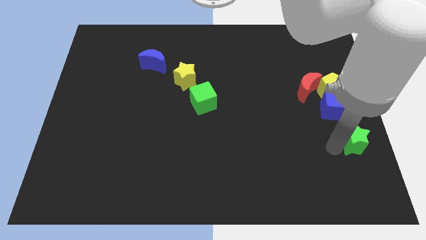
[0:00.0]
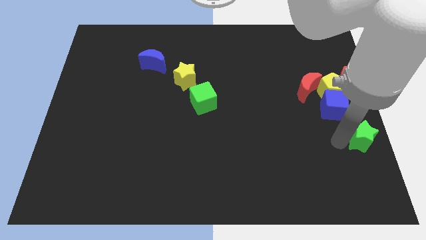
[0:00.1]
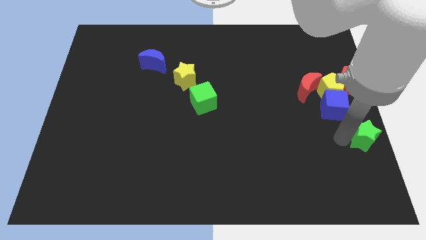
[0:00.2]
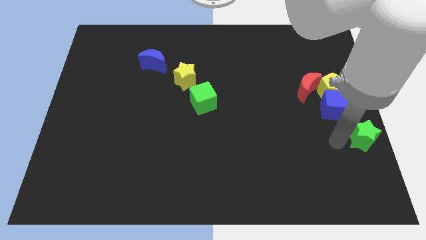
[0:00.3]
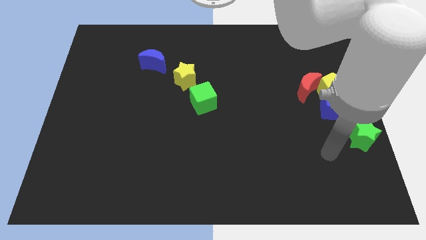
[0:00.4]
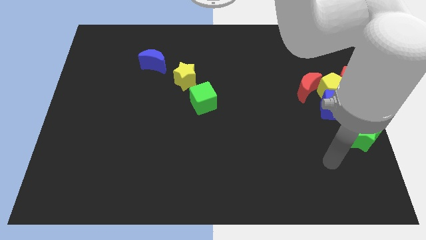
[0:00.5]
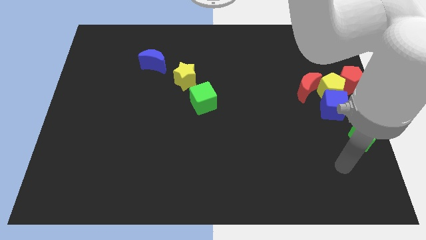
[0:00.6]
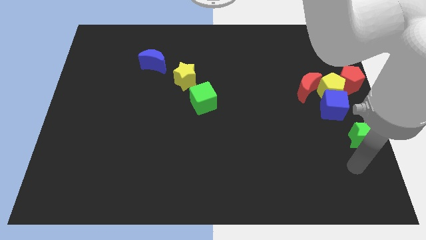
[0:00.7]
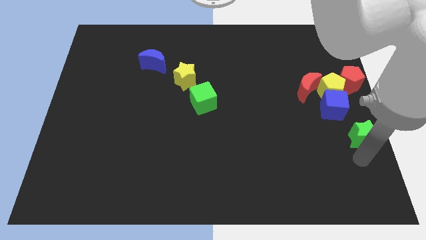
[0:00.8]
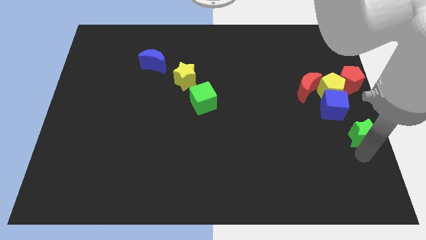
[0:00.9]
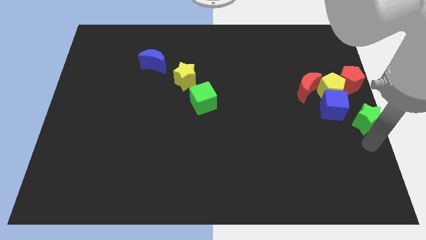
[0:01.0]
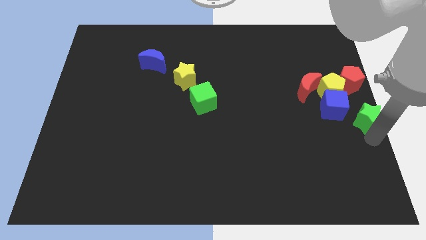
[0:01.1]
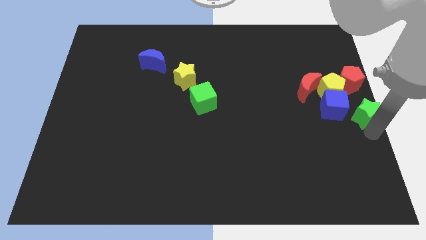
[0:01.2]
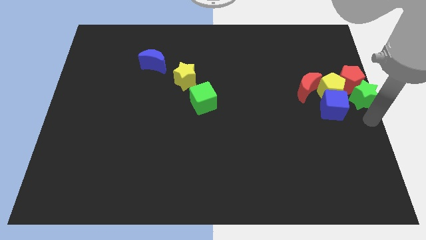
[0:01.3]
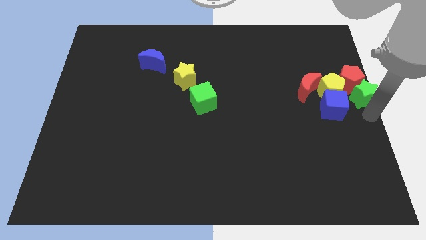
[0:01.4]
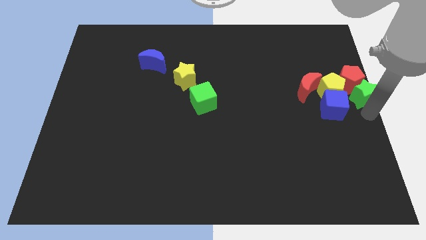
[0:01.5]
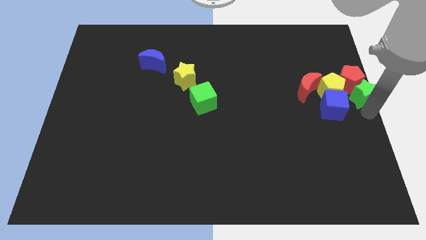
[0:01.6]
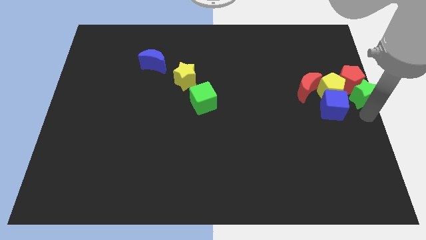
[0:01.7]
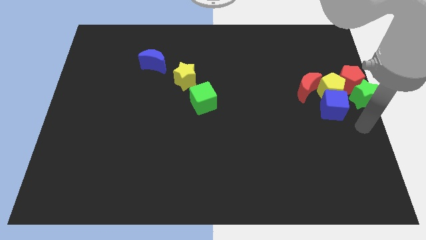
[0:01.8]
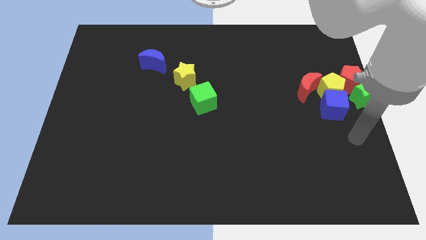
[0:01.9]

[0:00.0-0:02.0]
move the green star below the red penatgon

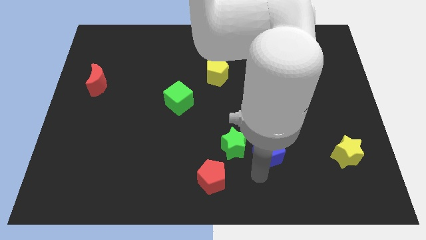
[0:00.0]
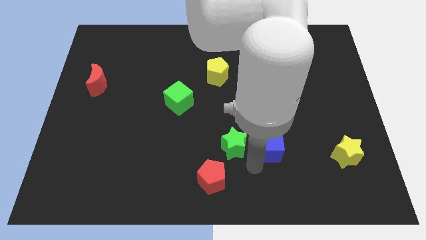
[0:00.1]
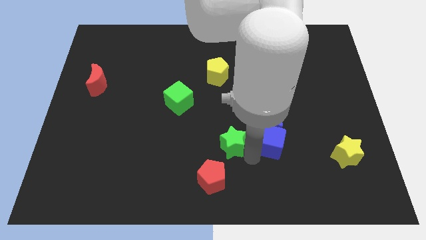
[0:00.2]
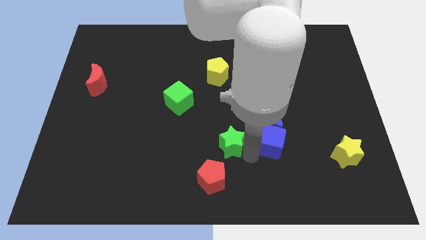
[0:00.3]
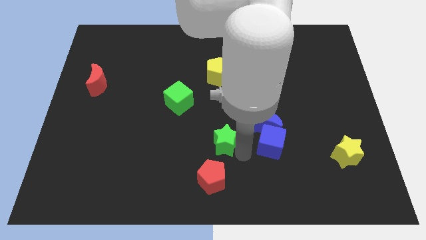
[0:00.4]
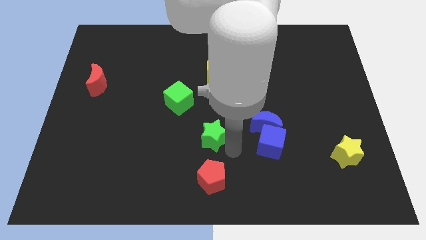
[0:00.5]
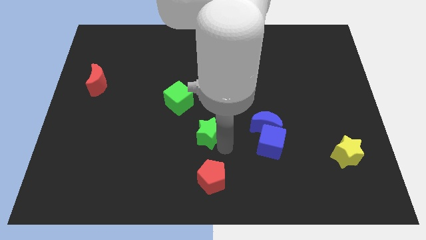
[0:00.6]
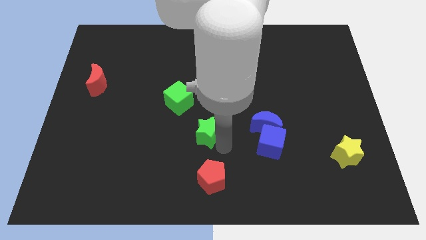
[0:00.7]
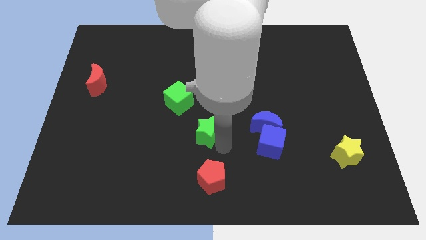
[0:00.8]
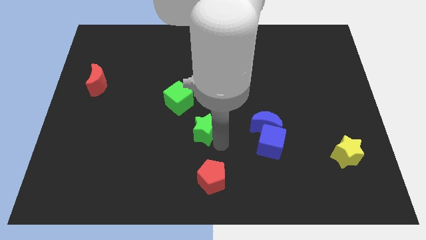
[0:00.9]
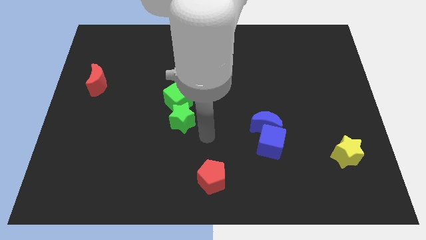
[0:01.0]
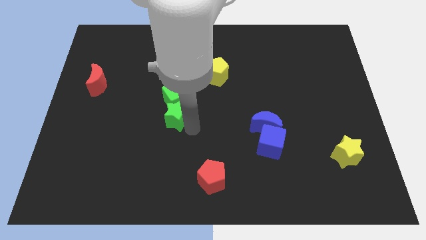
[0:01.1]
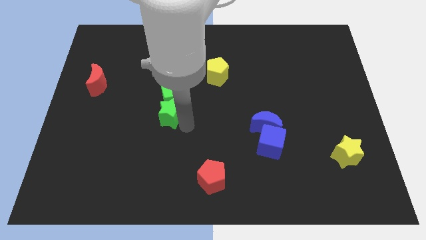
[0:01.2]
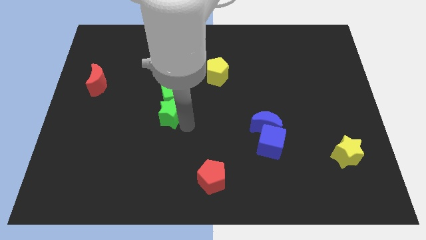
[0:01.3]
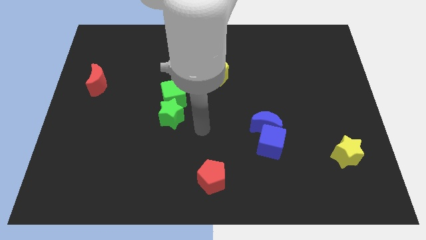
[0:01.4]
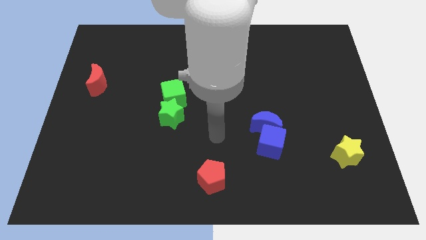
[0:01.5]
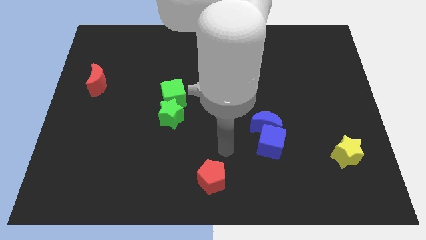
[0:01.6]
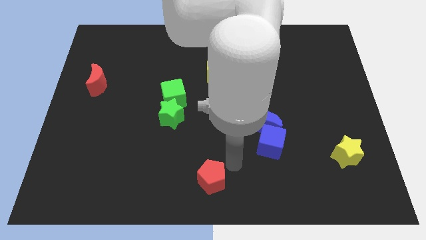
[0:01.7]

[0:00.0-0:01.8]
move the green star into the green cube

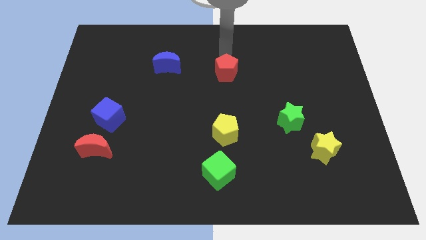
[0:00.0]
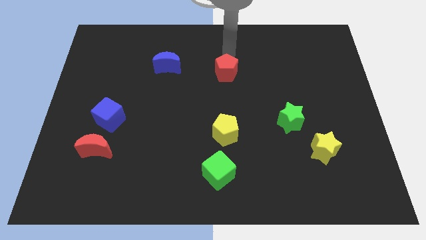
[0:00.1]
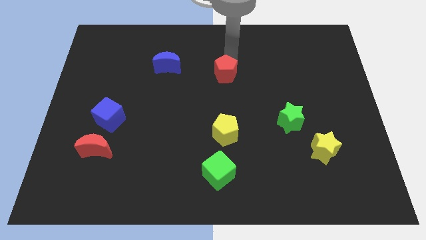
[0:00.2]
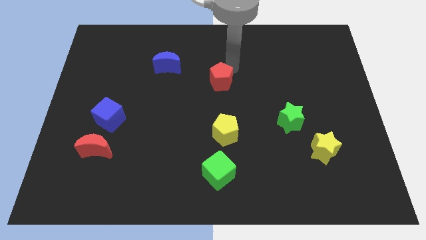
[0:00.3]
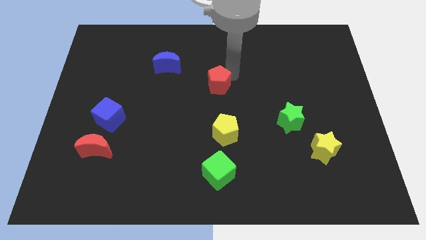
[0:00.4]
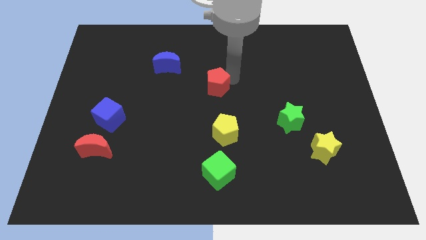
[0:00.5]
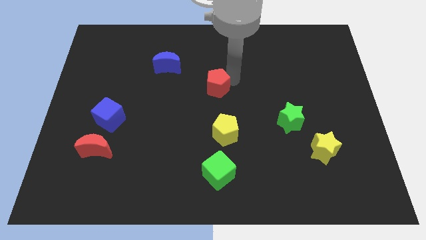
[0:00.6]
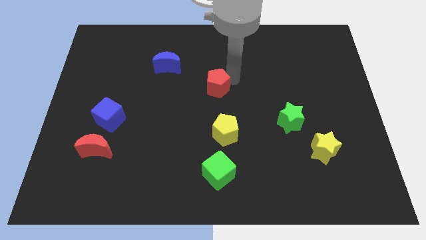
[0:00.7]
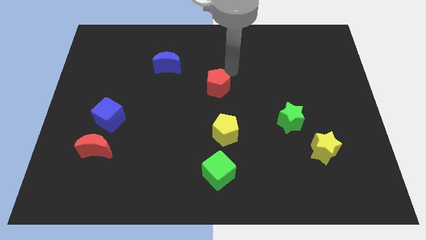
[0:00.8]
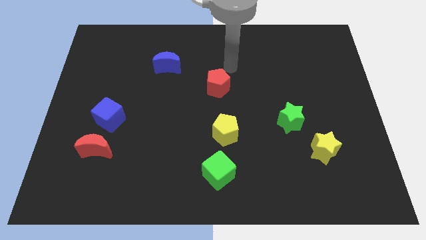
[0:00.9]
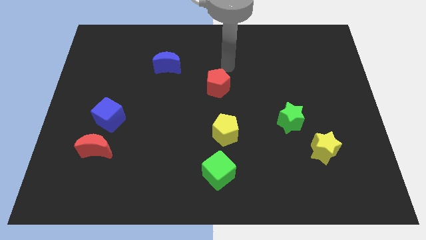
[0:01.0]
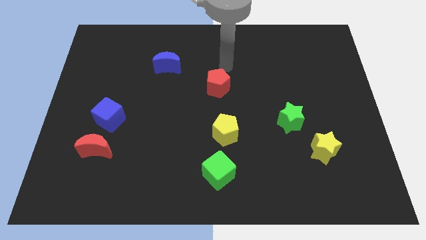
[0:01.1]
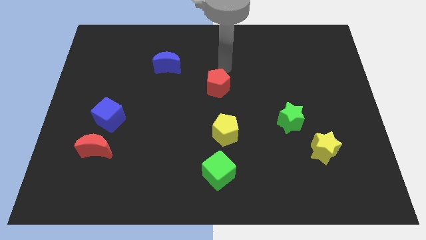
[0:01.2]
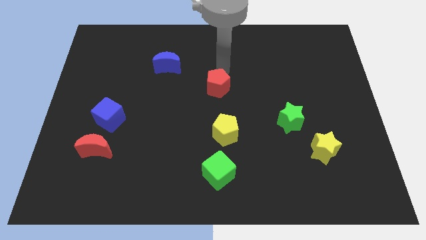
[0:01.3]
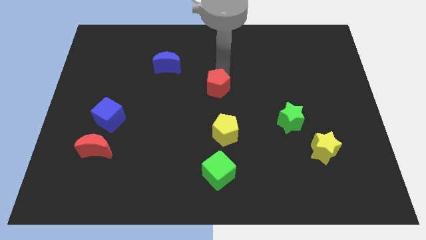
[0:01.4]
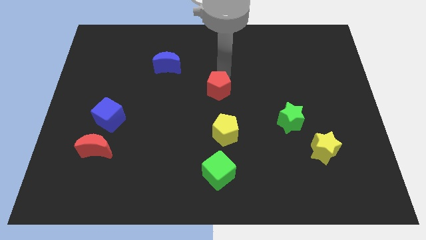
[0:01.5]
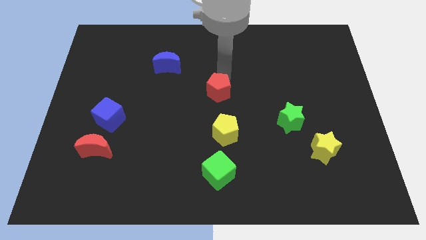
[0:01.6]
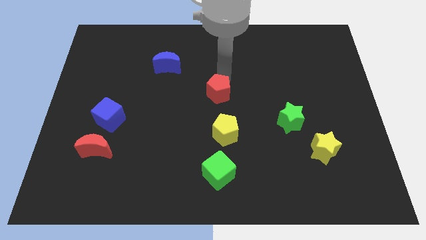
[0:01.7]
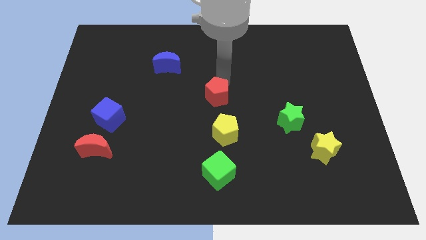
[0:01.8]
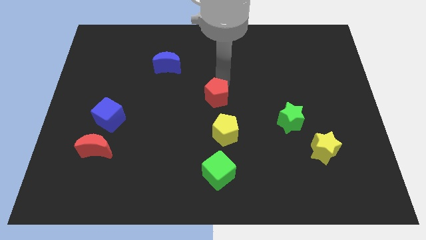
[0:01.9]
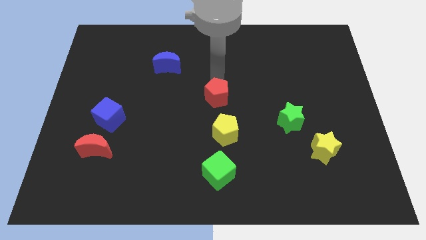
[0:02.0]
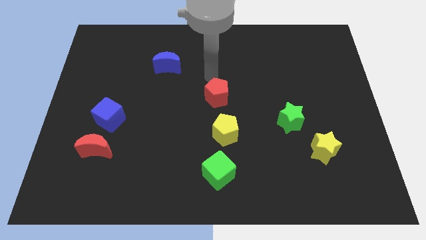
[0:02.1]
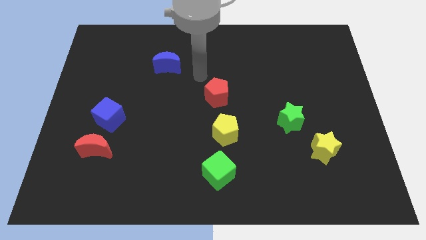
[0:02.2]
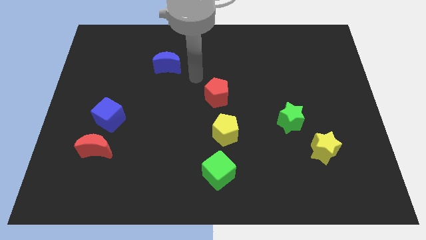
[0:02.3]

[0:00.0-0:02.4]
move the red pentagon above the yellow pentagon

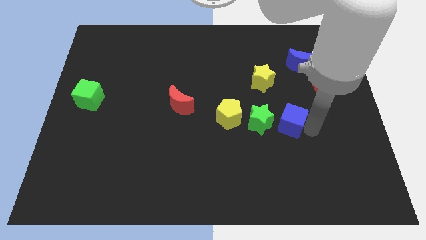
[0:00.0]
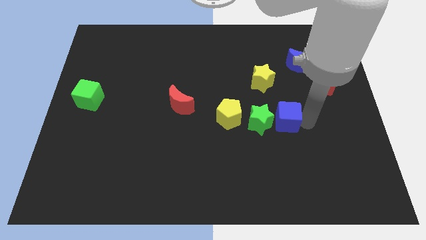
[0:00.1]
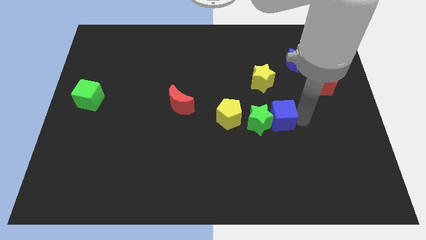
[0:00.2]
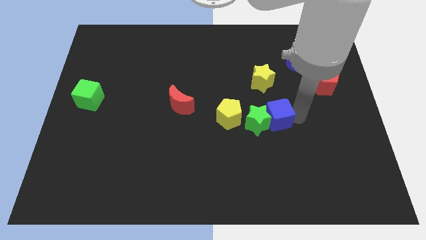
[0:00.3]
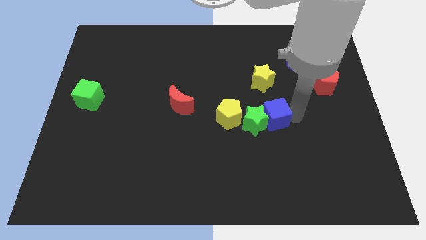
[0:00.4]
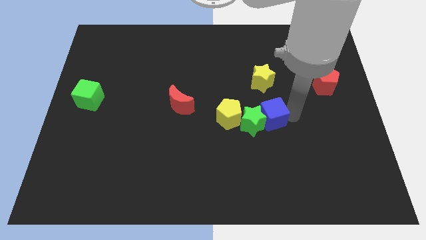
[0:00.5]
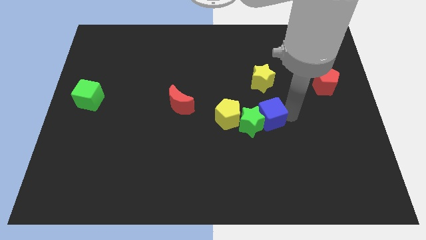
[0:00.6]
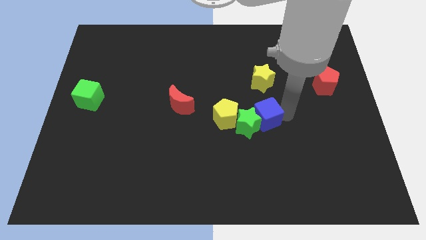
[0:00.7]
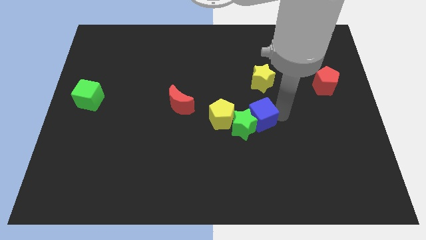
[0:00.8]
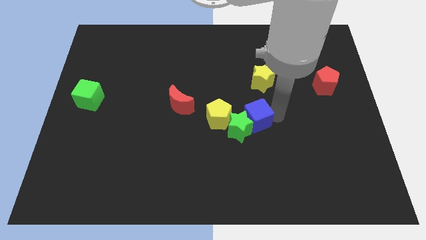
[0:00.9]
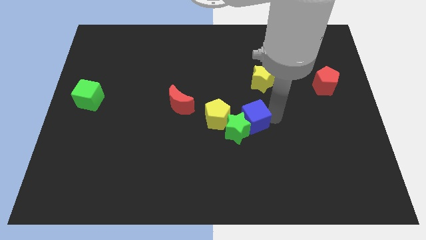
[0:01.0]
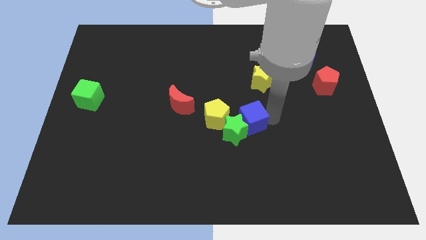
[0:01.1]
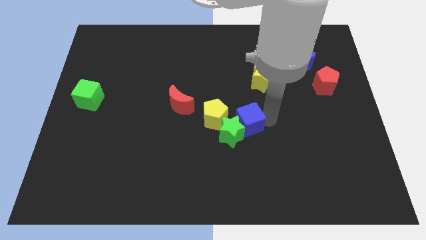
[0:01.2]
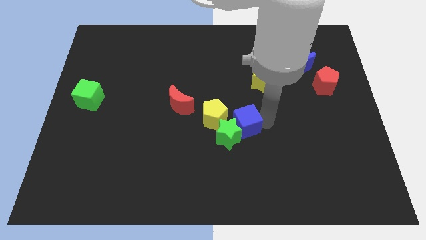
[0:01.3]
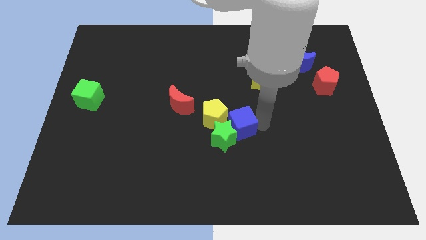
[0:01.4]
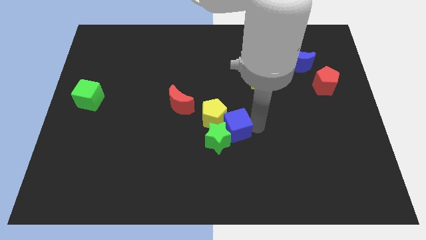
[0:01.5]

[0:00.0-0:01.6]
push the green star with the blue cube

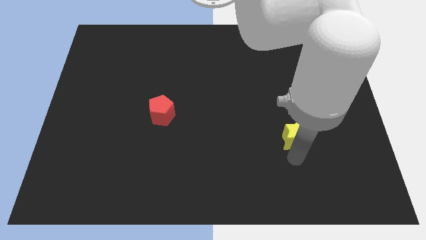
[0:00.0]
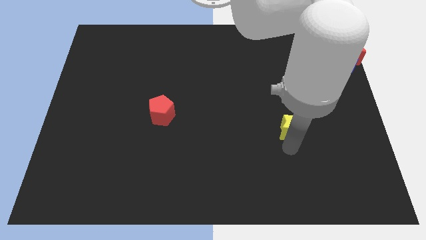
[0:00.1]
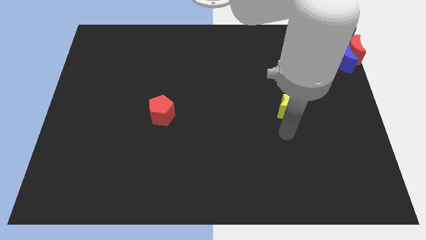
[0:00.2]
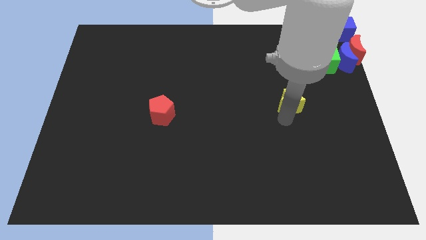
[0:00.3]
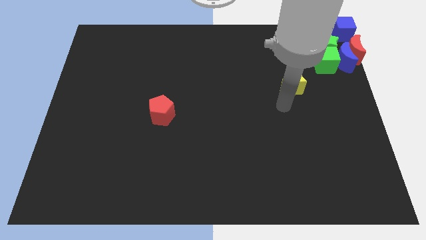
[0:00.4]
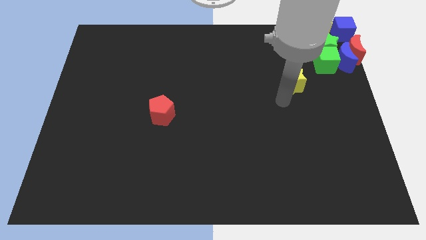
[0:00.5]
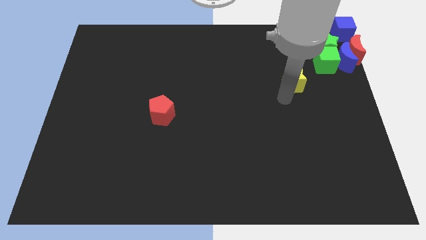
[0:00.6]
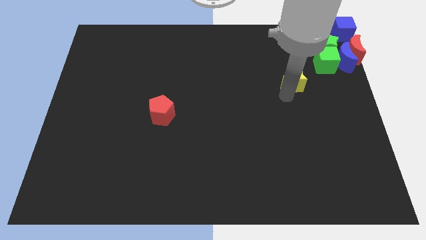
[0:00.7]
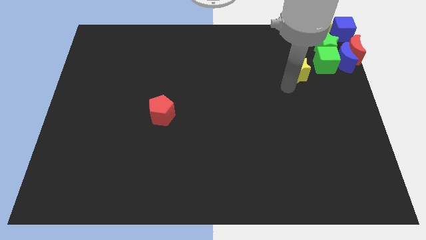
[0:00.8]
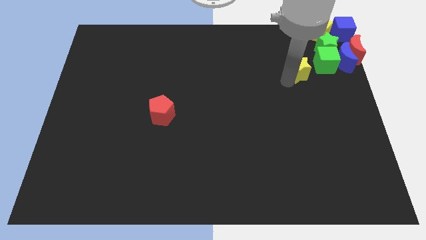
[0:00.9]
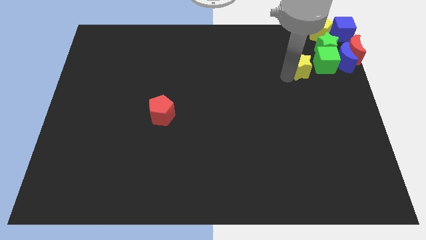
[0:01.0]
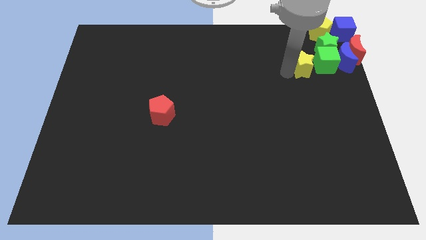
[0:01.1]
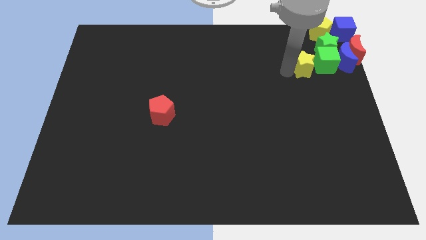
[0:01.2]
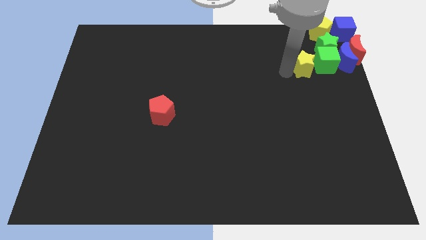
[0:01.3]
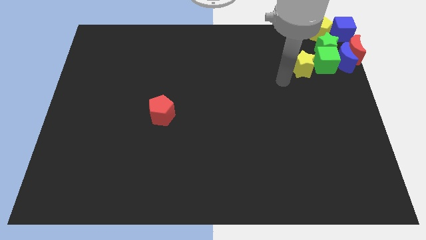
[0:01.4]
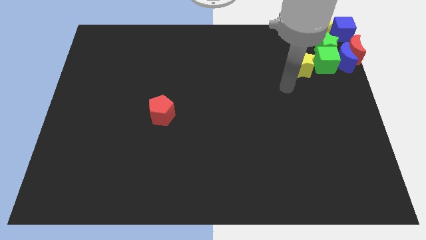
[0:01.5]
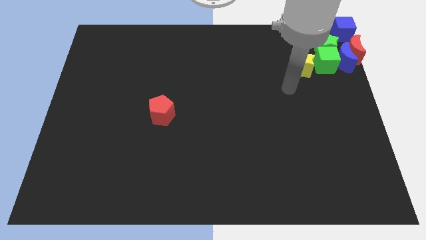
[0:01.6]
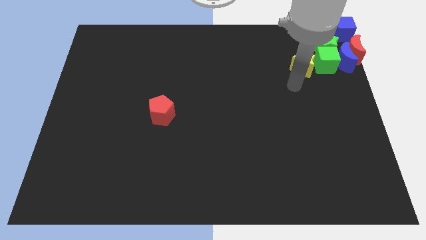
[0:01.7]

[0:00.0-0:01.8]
move the yellow star to the left of green cube
